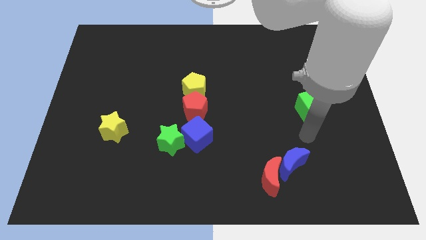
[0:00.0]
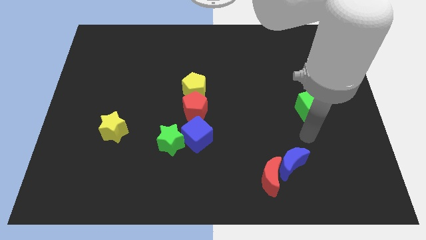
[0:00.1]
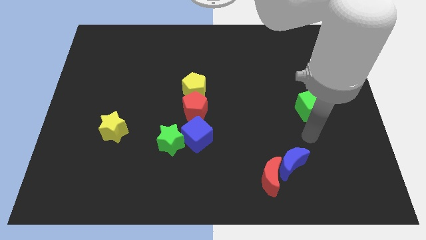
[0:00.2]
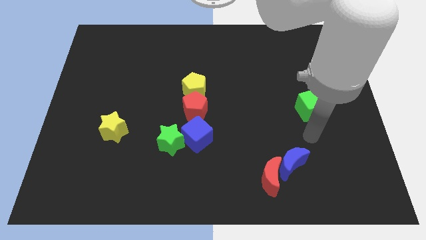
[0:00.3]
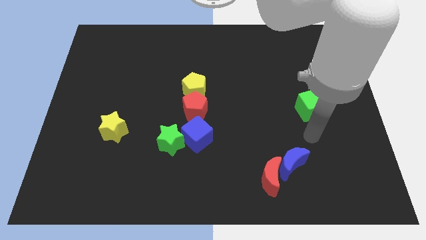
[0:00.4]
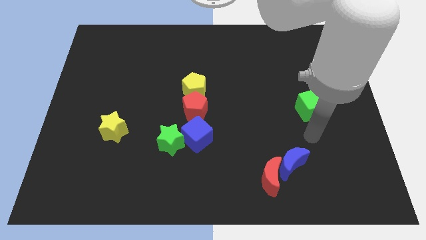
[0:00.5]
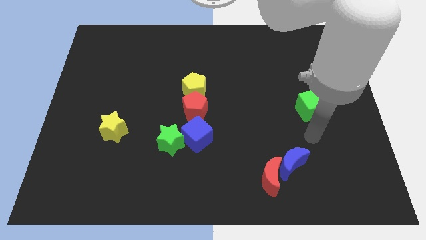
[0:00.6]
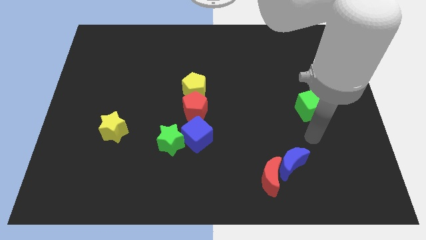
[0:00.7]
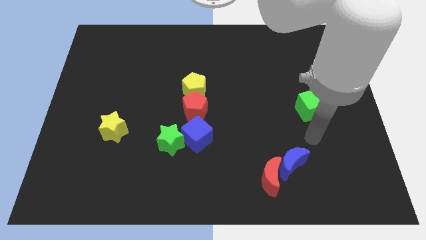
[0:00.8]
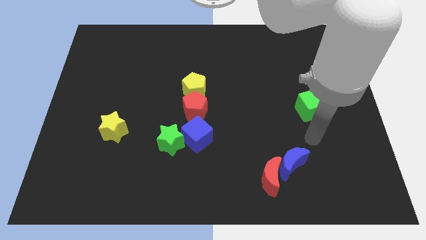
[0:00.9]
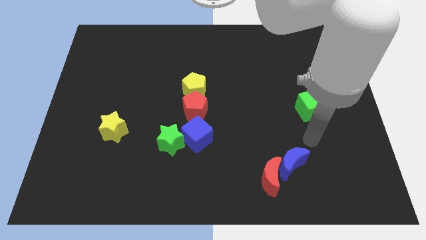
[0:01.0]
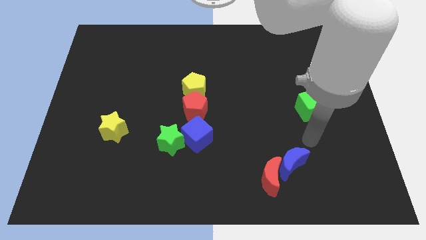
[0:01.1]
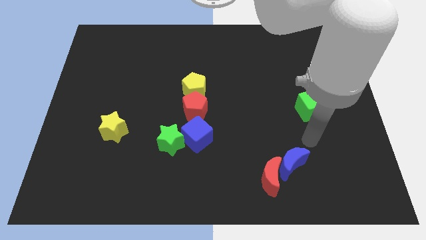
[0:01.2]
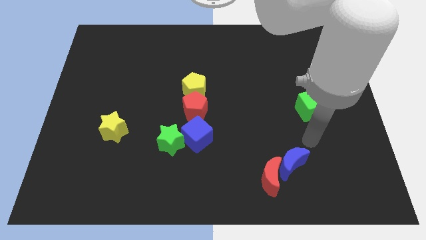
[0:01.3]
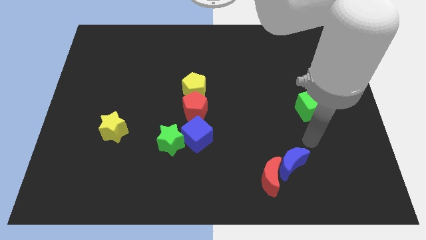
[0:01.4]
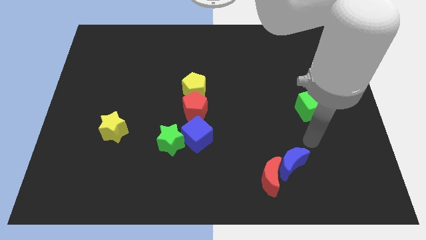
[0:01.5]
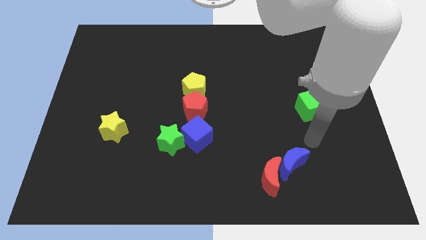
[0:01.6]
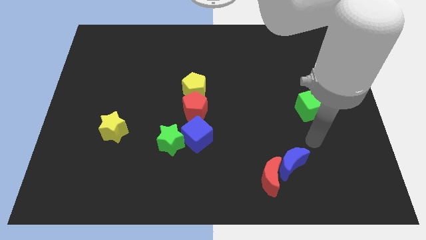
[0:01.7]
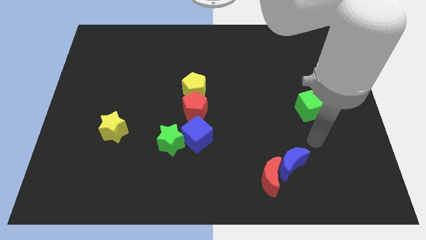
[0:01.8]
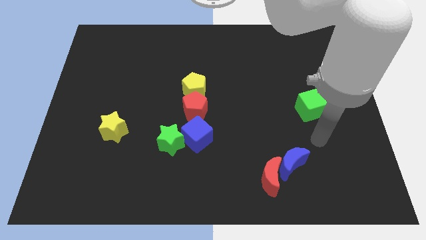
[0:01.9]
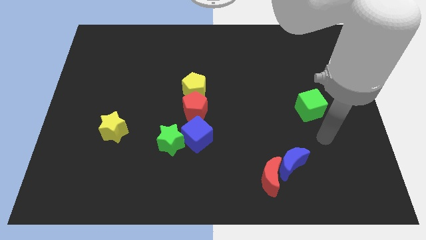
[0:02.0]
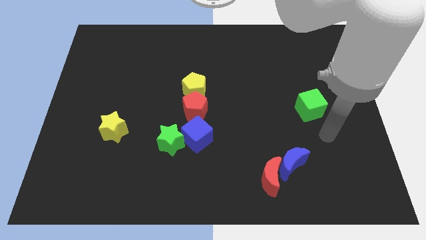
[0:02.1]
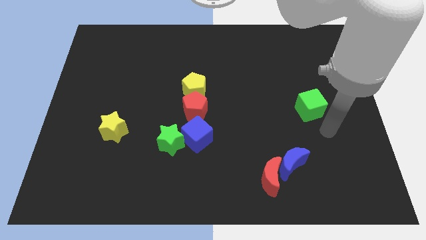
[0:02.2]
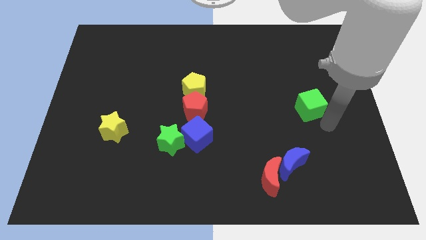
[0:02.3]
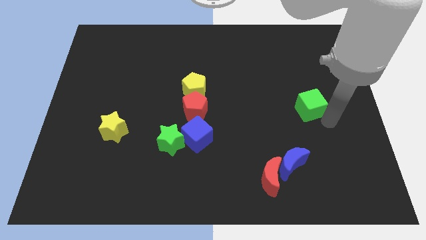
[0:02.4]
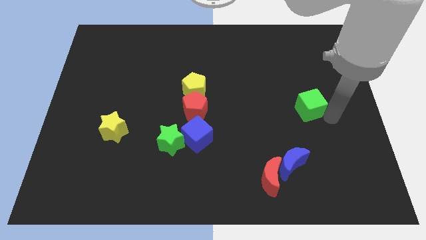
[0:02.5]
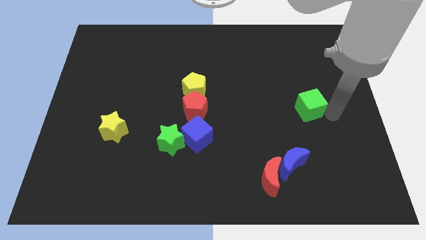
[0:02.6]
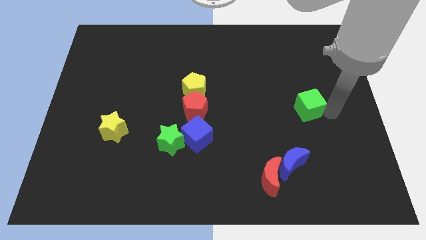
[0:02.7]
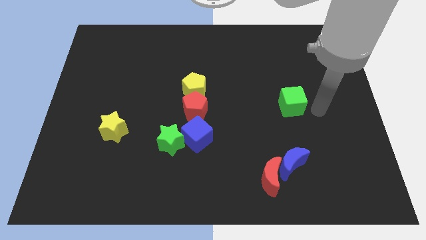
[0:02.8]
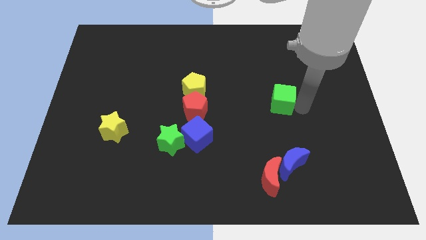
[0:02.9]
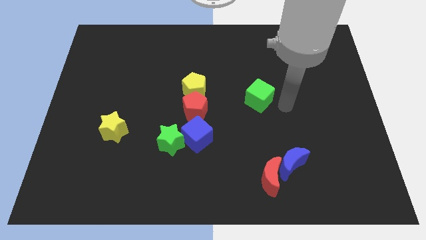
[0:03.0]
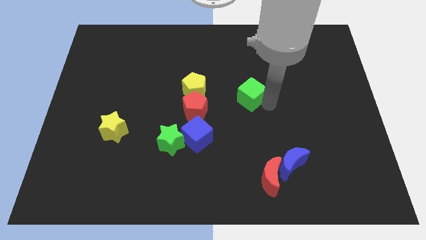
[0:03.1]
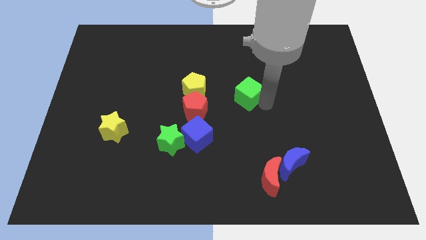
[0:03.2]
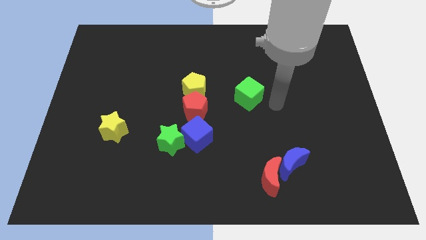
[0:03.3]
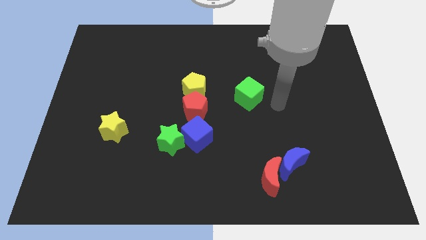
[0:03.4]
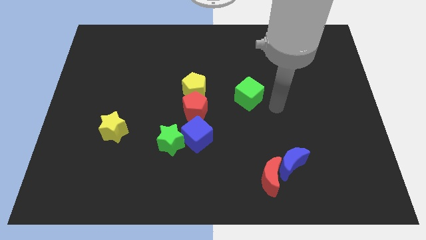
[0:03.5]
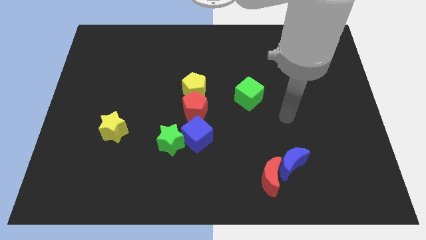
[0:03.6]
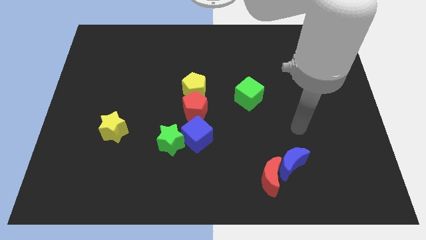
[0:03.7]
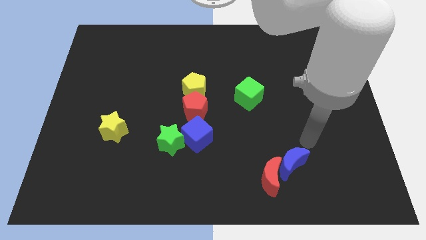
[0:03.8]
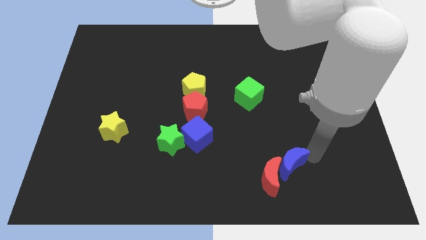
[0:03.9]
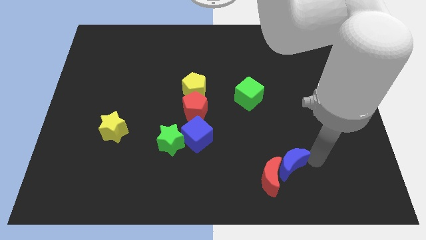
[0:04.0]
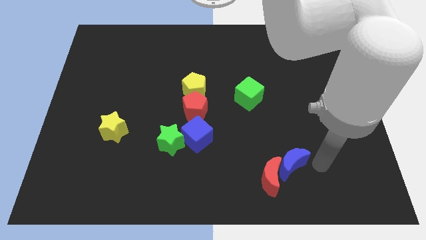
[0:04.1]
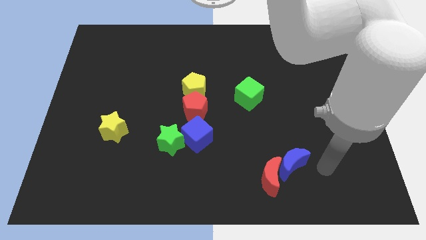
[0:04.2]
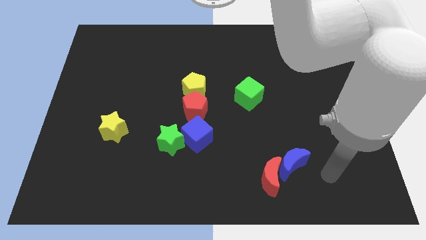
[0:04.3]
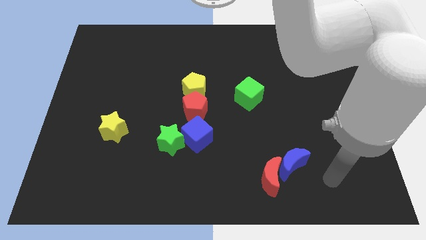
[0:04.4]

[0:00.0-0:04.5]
push the green cube slightly towards the left side

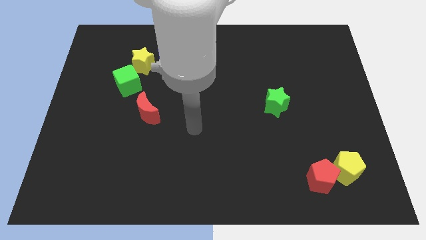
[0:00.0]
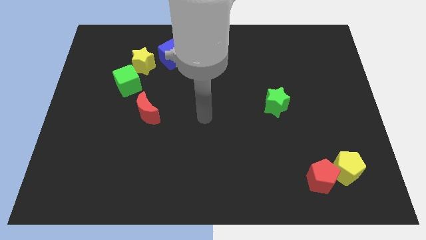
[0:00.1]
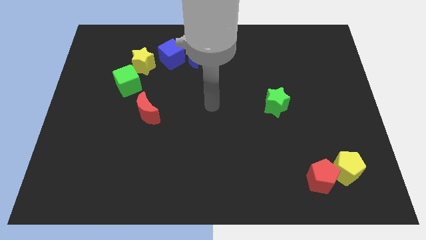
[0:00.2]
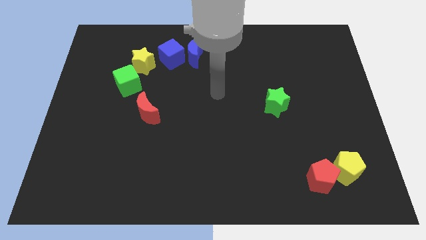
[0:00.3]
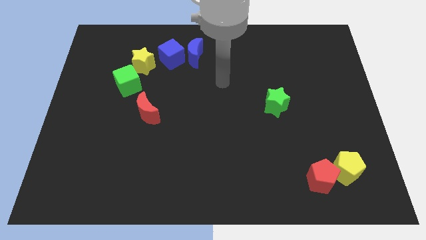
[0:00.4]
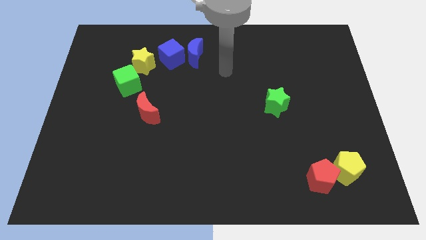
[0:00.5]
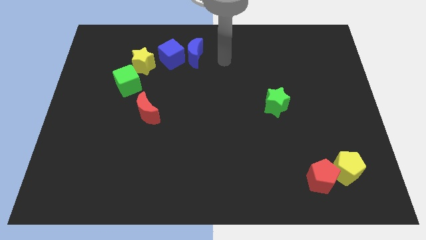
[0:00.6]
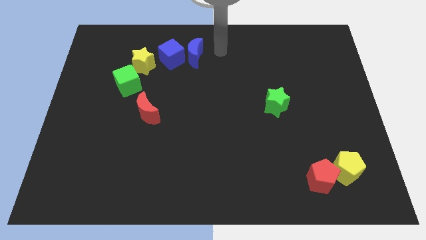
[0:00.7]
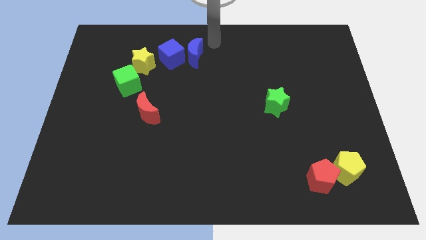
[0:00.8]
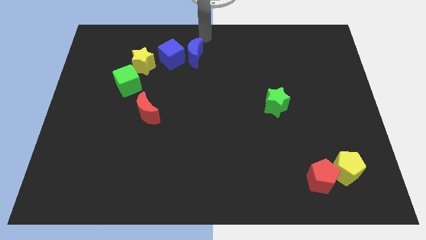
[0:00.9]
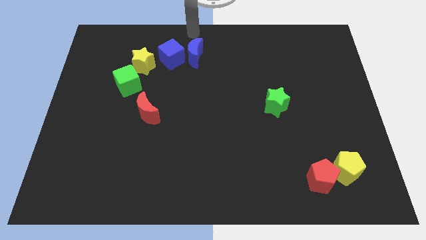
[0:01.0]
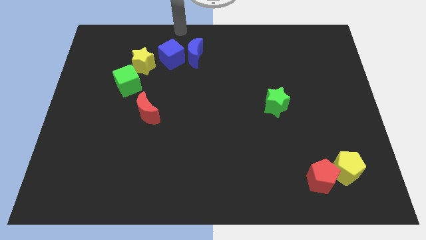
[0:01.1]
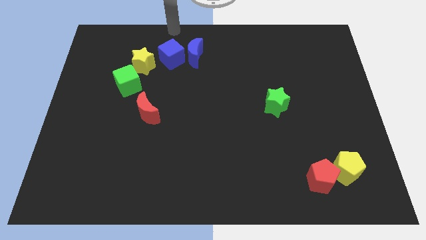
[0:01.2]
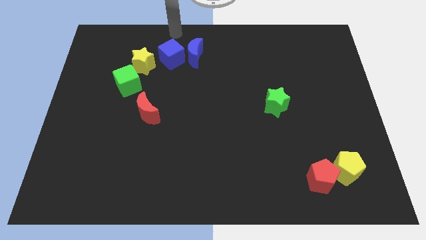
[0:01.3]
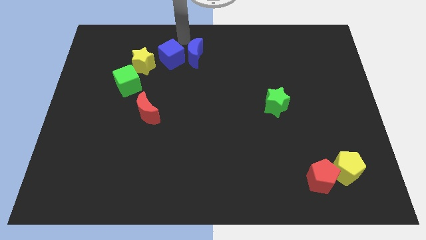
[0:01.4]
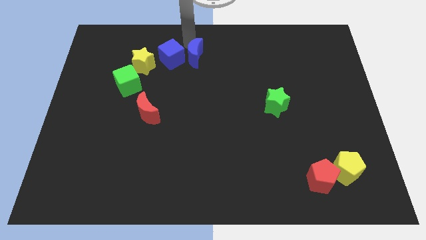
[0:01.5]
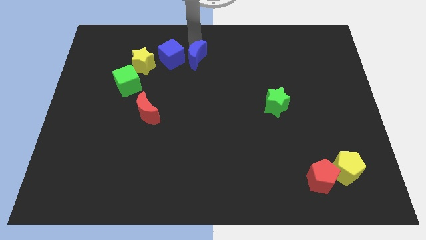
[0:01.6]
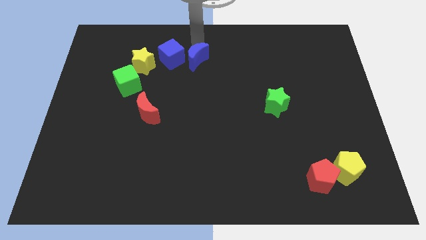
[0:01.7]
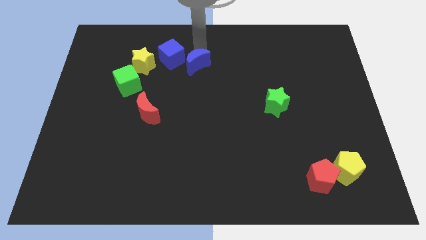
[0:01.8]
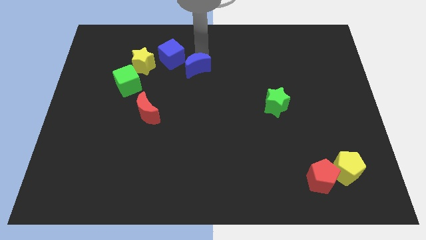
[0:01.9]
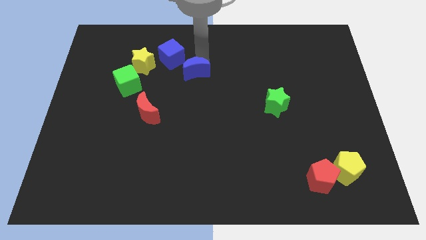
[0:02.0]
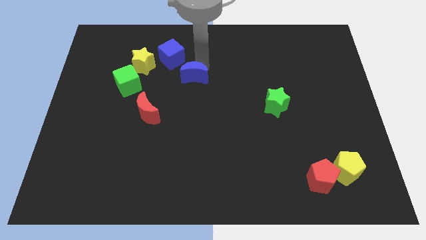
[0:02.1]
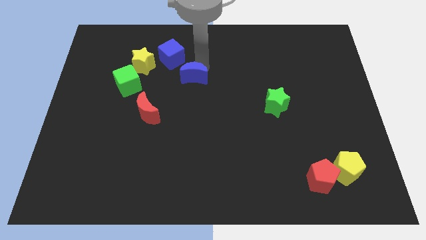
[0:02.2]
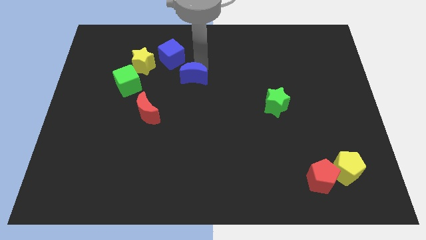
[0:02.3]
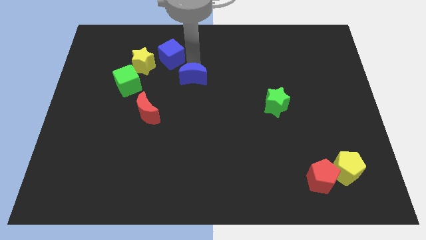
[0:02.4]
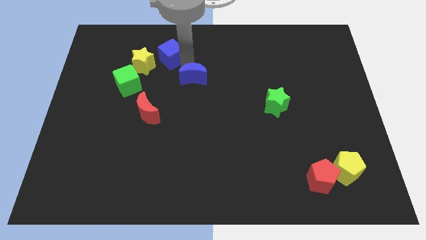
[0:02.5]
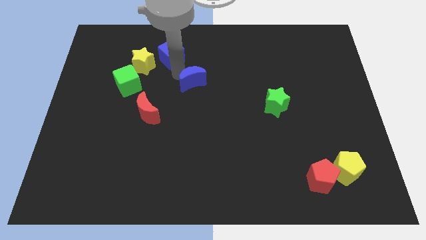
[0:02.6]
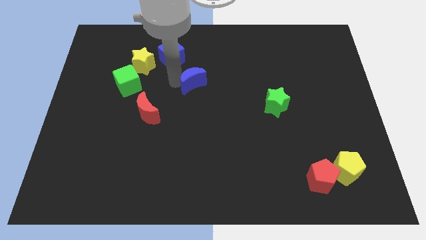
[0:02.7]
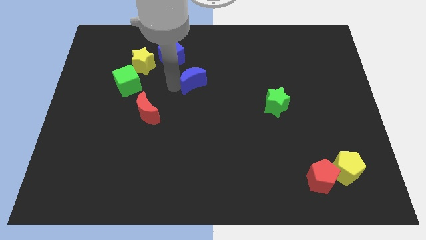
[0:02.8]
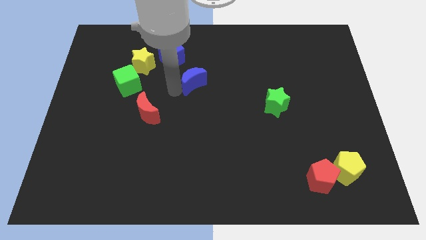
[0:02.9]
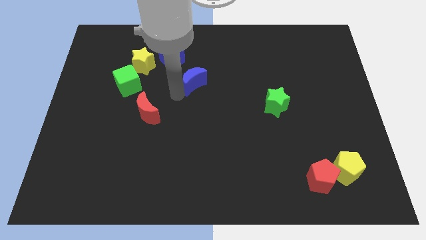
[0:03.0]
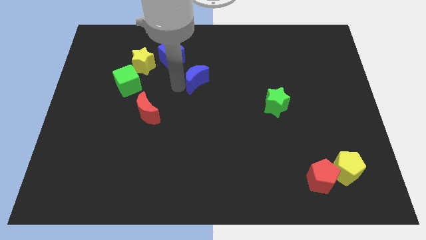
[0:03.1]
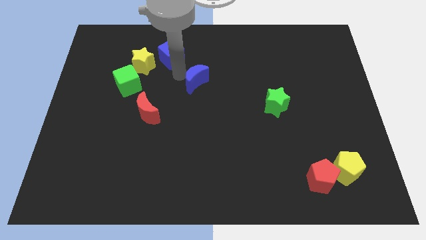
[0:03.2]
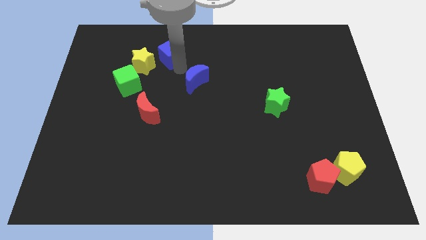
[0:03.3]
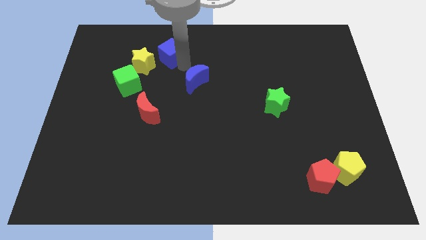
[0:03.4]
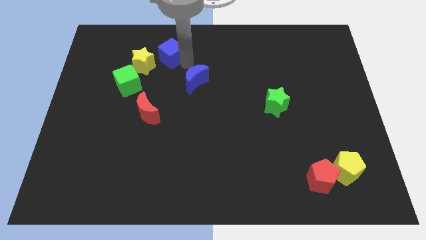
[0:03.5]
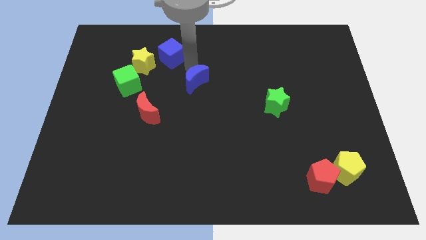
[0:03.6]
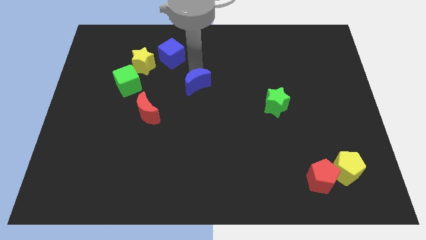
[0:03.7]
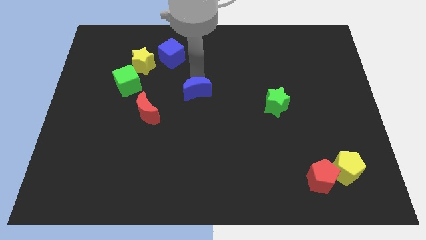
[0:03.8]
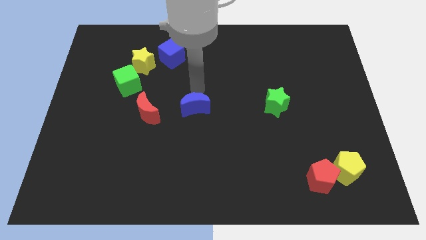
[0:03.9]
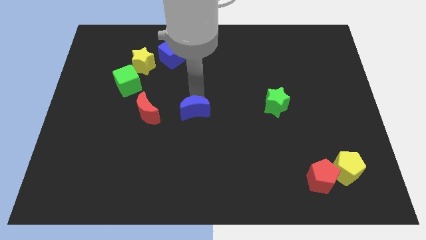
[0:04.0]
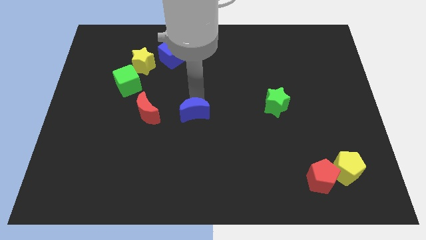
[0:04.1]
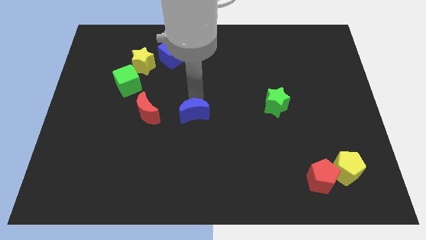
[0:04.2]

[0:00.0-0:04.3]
move the blue crescent to the right of the red crescent
